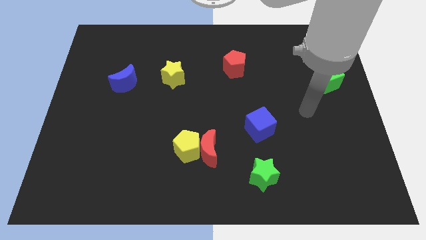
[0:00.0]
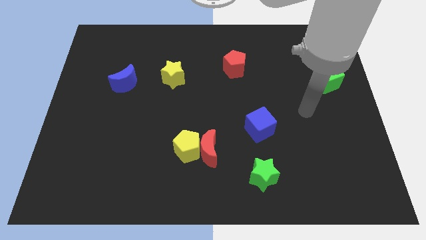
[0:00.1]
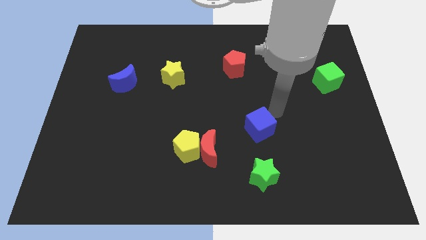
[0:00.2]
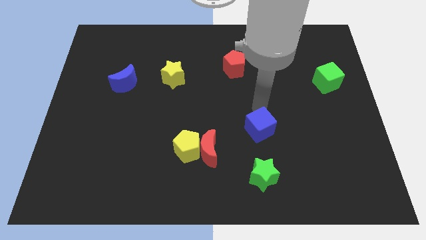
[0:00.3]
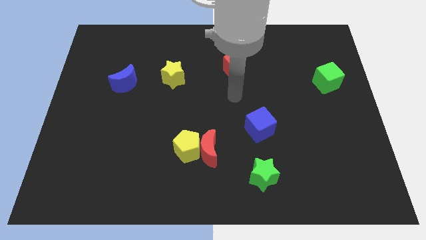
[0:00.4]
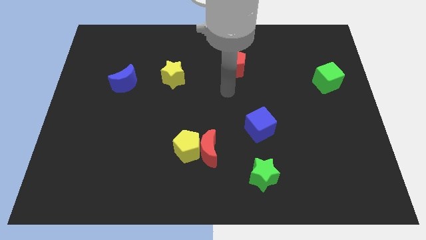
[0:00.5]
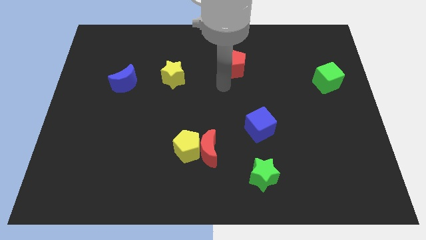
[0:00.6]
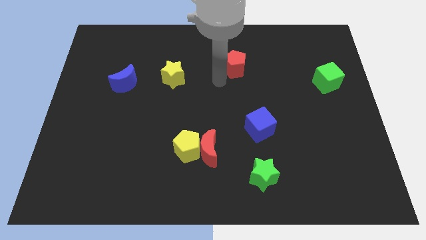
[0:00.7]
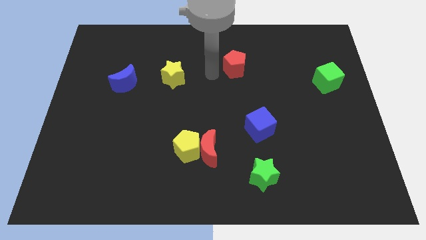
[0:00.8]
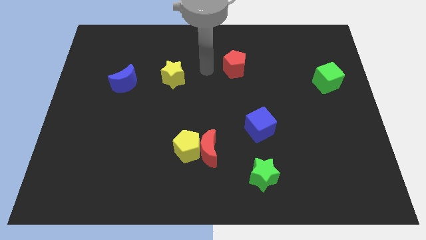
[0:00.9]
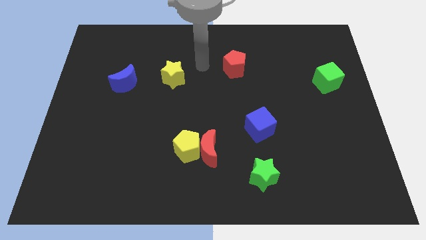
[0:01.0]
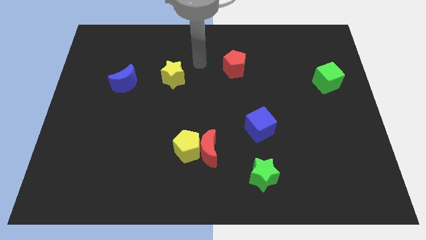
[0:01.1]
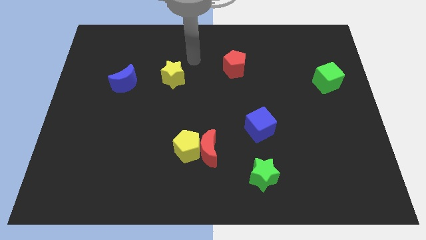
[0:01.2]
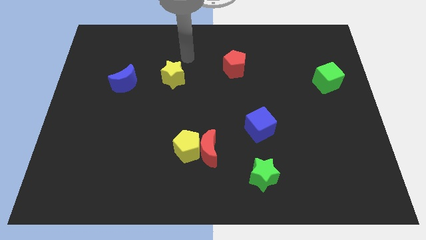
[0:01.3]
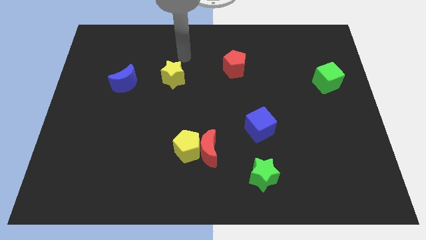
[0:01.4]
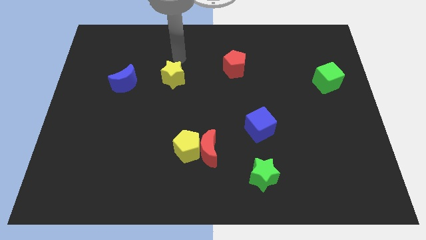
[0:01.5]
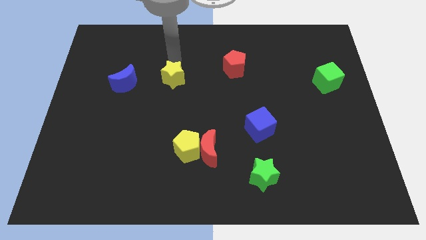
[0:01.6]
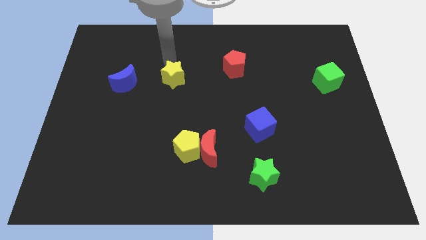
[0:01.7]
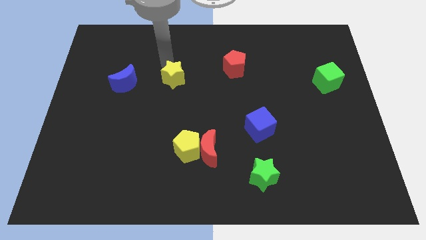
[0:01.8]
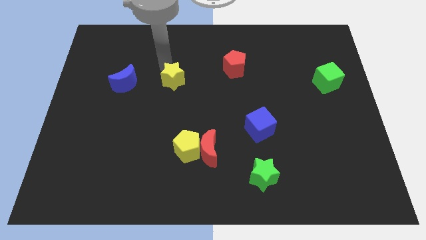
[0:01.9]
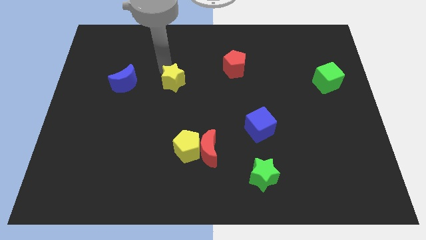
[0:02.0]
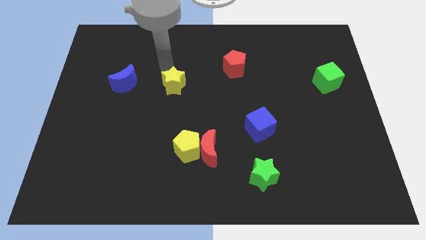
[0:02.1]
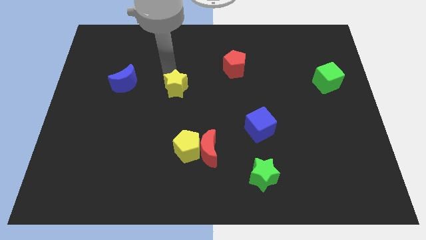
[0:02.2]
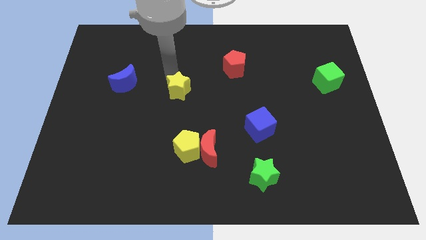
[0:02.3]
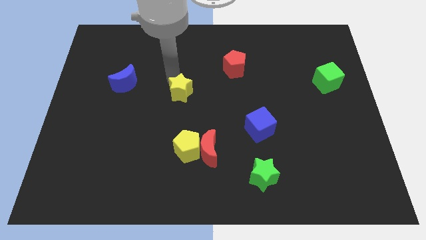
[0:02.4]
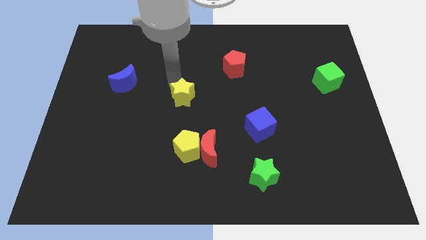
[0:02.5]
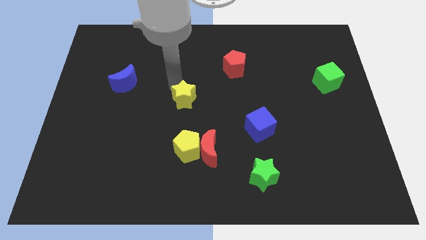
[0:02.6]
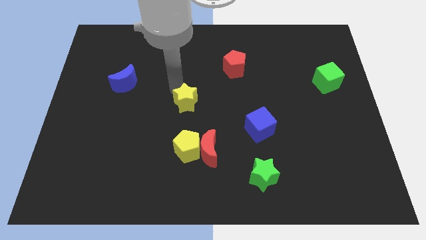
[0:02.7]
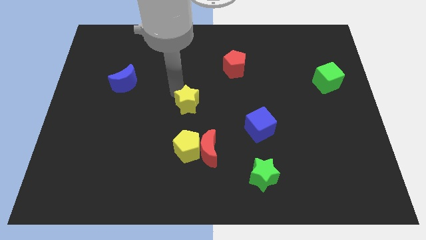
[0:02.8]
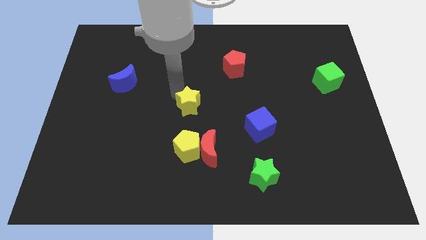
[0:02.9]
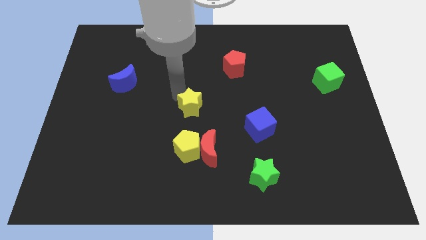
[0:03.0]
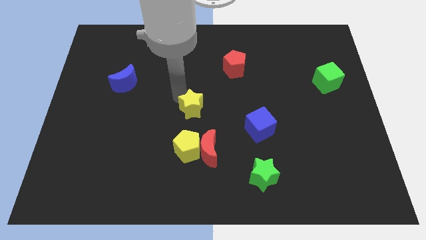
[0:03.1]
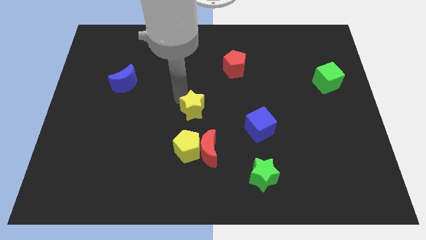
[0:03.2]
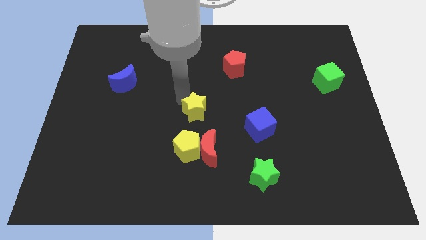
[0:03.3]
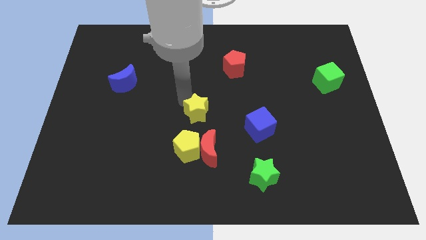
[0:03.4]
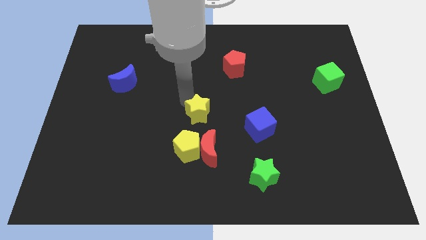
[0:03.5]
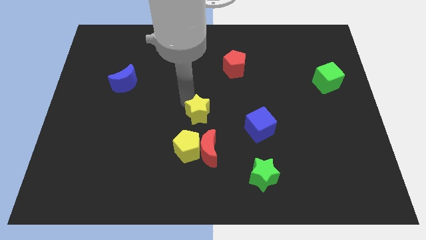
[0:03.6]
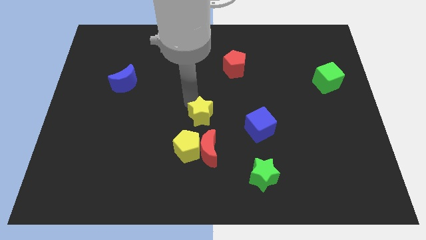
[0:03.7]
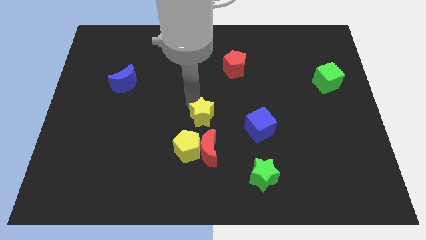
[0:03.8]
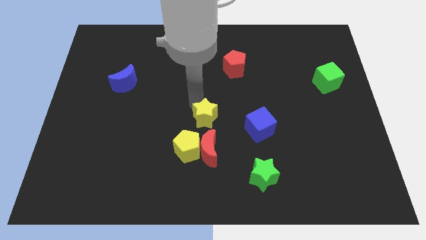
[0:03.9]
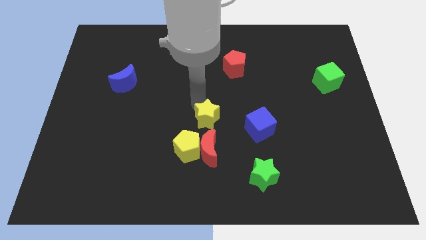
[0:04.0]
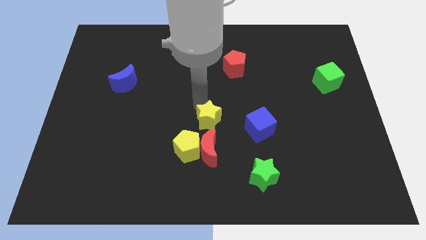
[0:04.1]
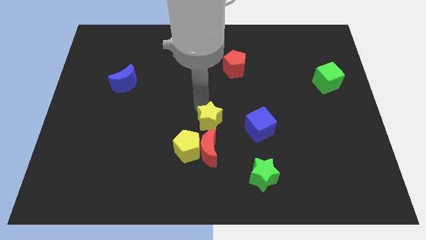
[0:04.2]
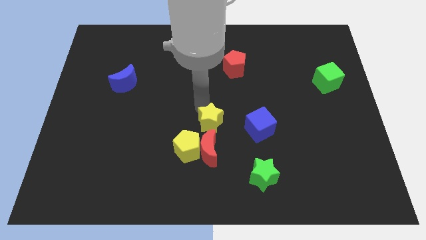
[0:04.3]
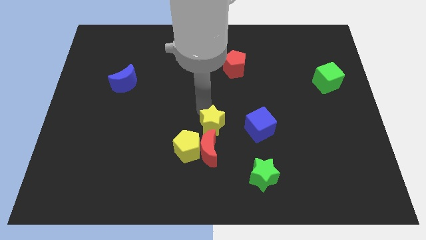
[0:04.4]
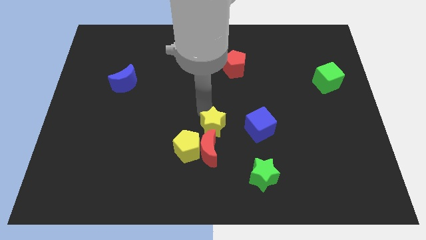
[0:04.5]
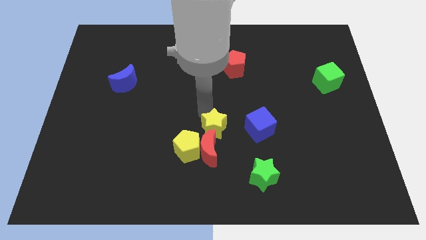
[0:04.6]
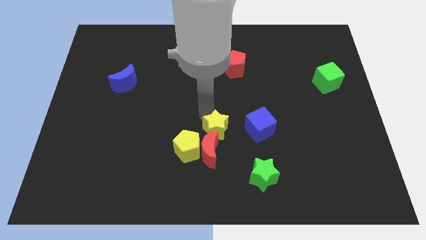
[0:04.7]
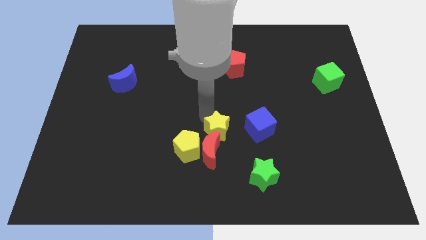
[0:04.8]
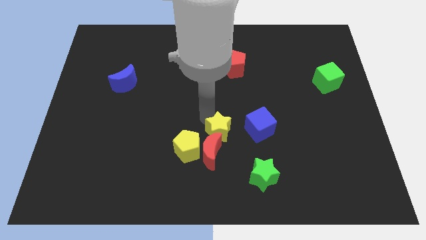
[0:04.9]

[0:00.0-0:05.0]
slide the yellow star towards the red moon

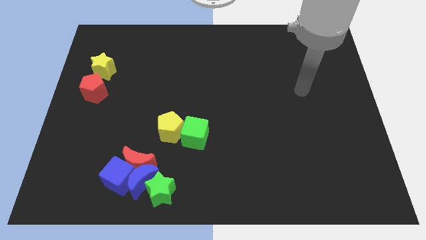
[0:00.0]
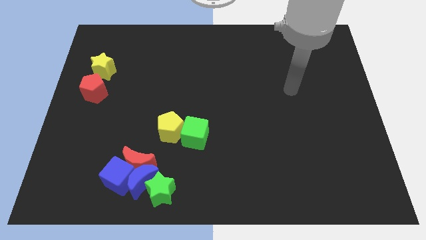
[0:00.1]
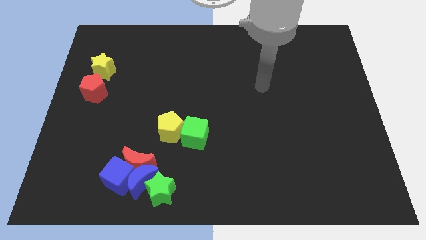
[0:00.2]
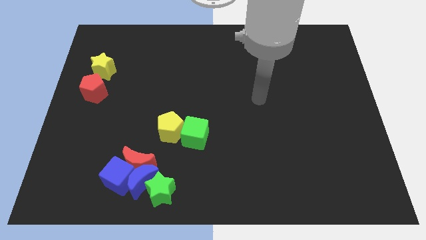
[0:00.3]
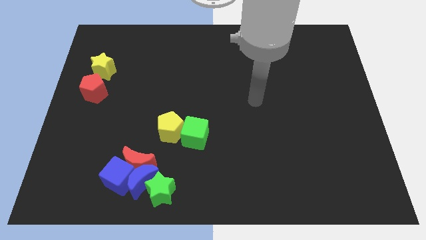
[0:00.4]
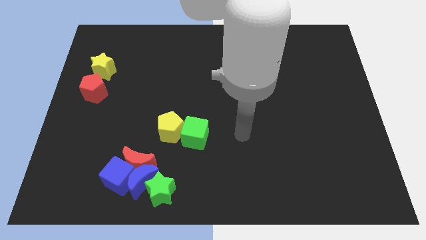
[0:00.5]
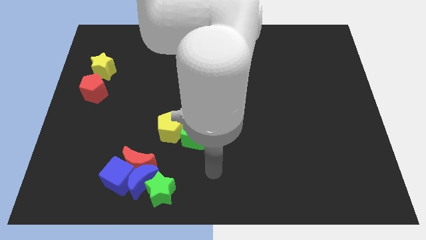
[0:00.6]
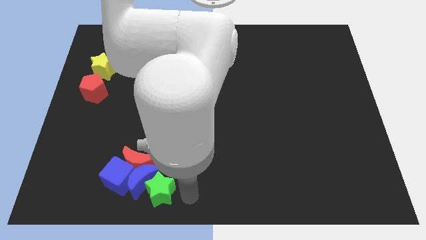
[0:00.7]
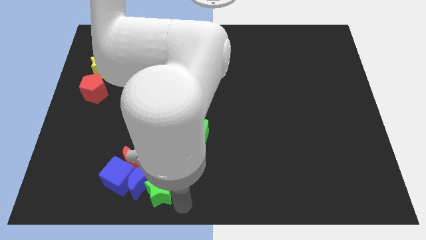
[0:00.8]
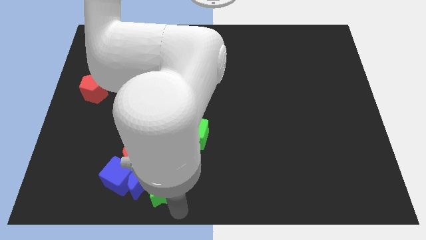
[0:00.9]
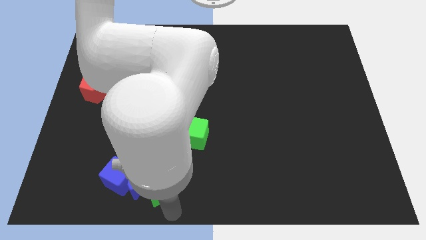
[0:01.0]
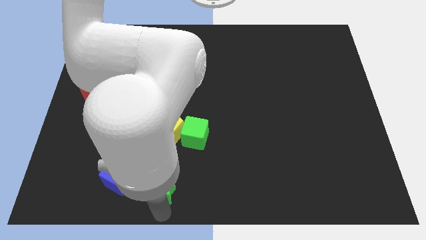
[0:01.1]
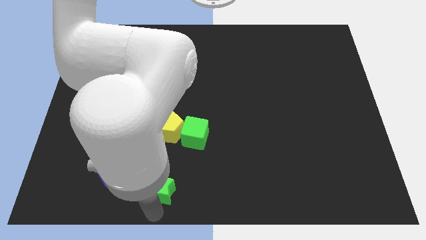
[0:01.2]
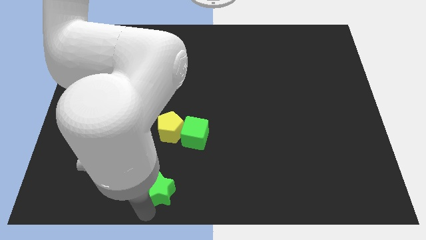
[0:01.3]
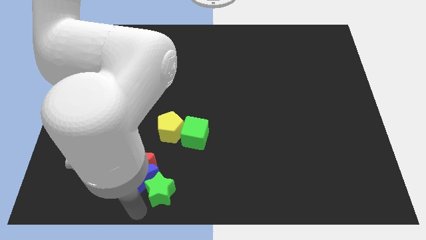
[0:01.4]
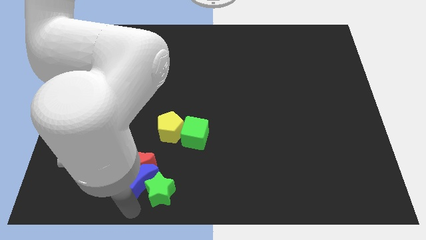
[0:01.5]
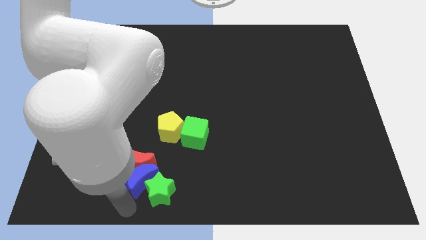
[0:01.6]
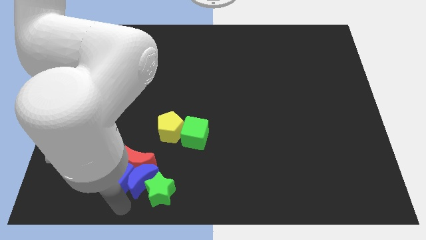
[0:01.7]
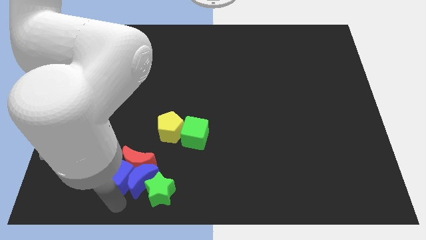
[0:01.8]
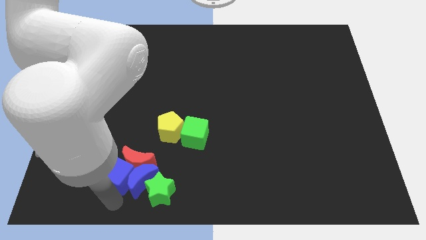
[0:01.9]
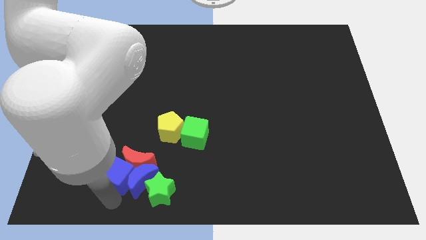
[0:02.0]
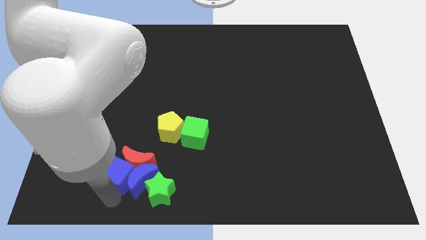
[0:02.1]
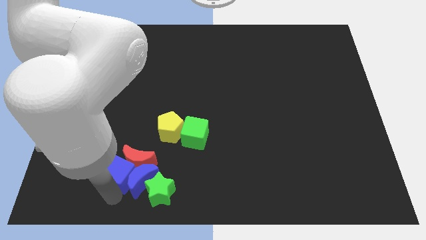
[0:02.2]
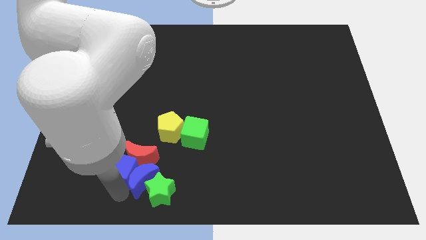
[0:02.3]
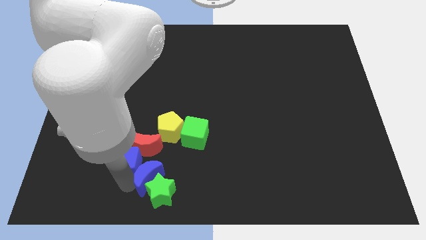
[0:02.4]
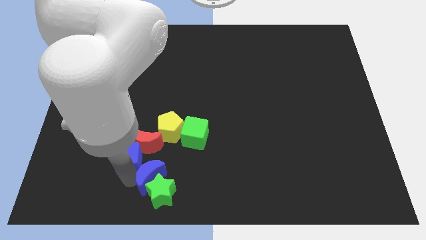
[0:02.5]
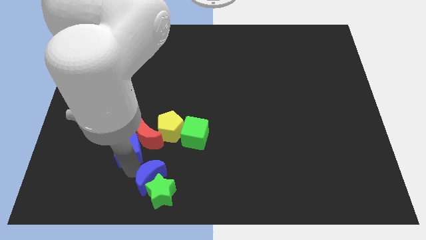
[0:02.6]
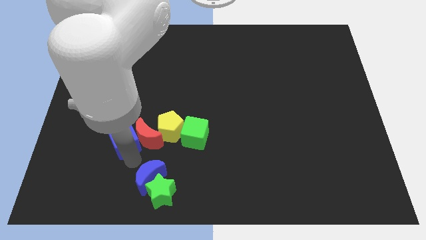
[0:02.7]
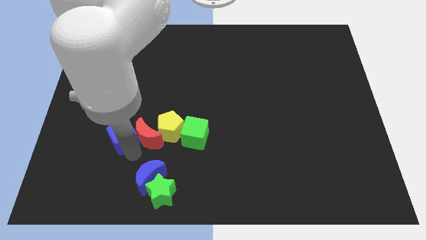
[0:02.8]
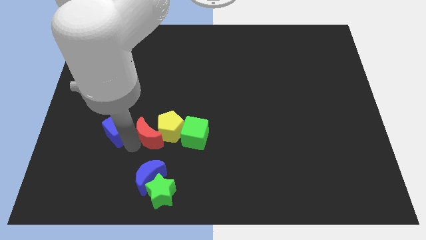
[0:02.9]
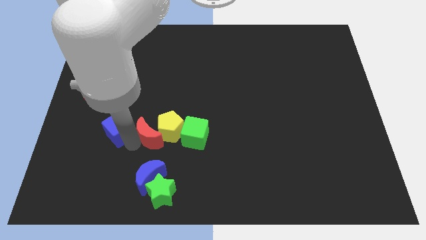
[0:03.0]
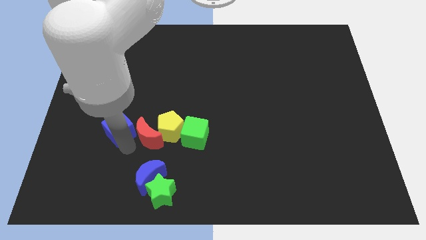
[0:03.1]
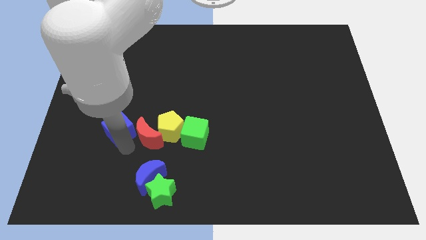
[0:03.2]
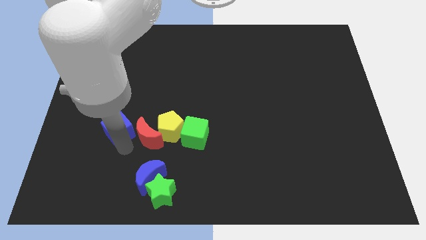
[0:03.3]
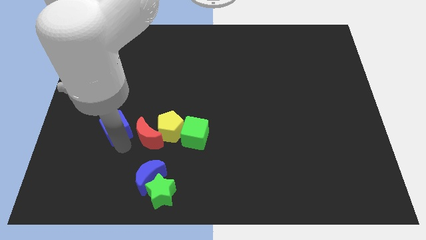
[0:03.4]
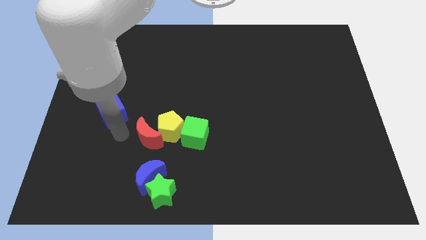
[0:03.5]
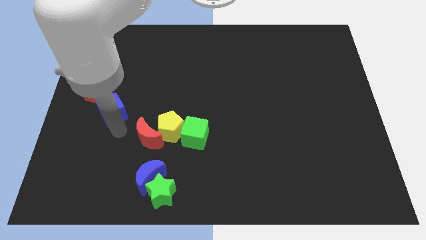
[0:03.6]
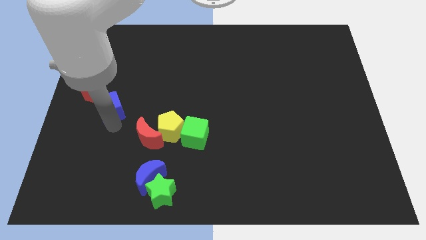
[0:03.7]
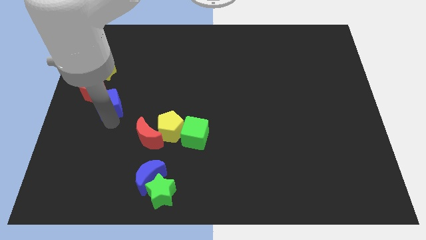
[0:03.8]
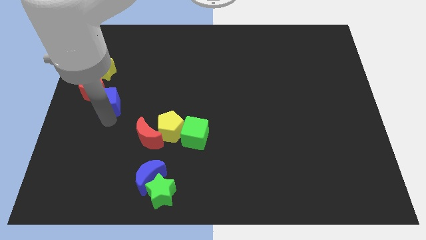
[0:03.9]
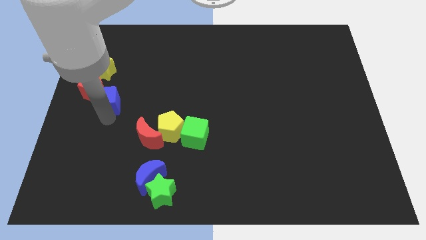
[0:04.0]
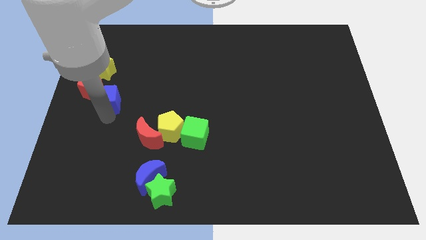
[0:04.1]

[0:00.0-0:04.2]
move the blue cube towards the red pentagon
